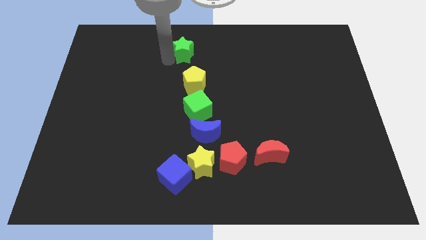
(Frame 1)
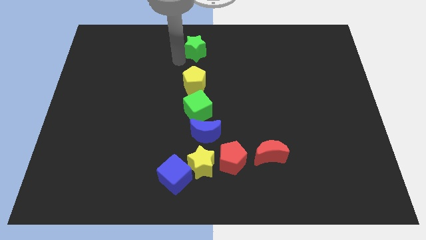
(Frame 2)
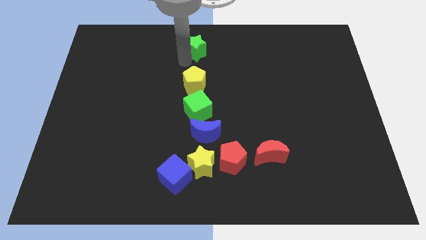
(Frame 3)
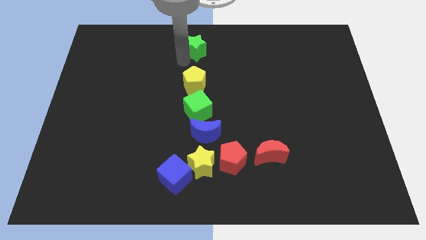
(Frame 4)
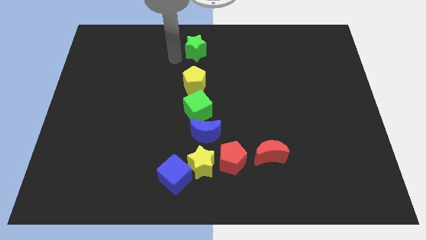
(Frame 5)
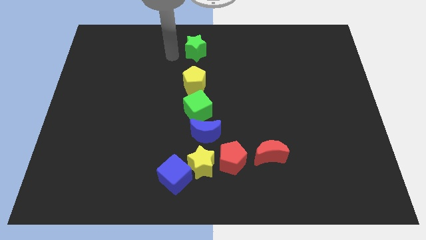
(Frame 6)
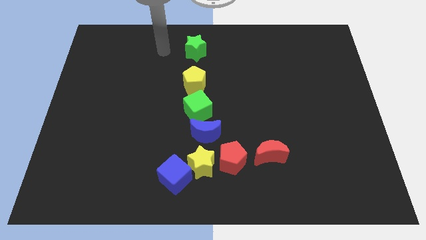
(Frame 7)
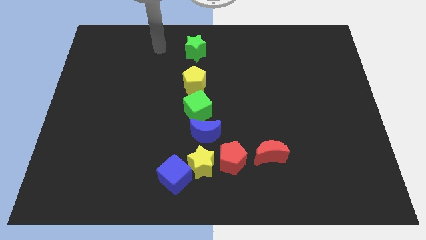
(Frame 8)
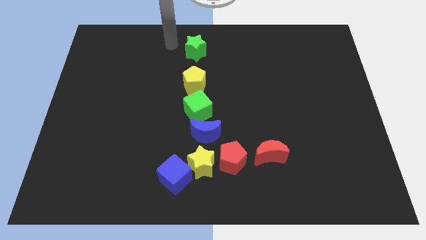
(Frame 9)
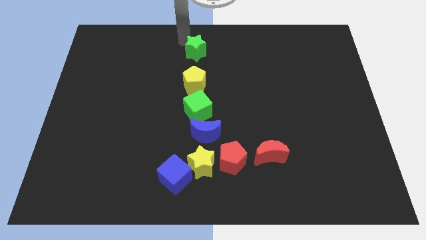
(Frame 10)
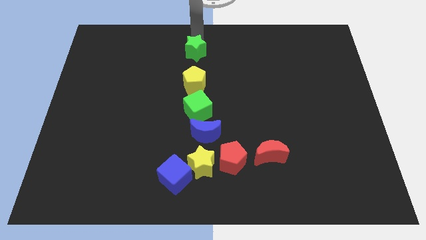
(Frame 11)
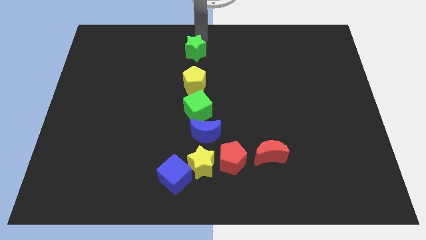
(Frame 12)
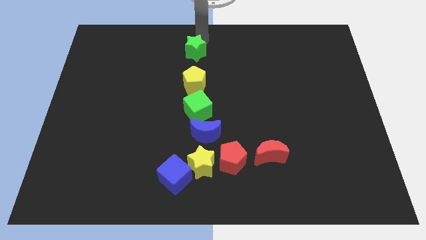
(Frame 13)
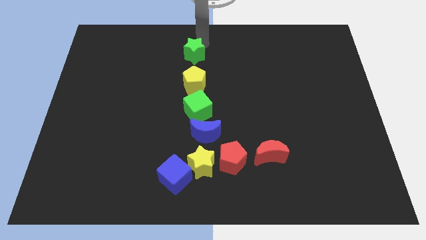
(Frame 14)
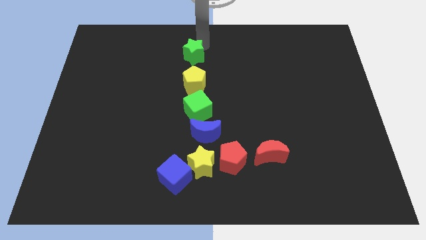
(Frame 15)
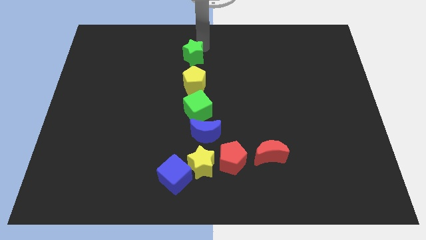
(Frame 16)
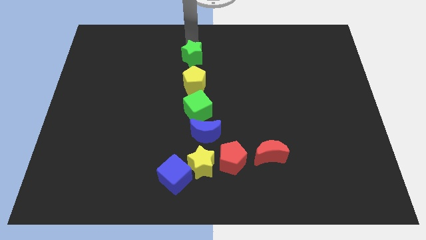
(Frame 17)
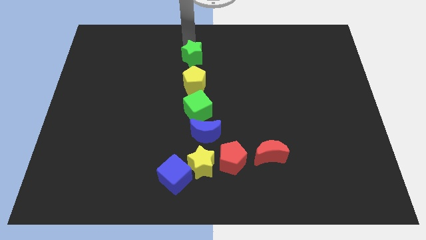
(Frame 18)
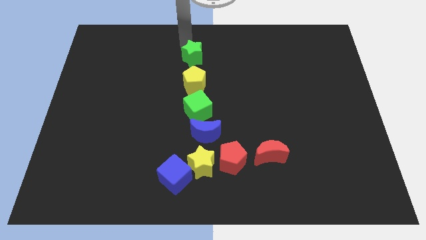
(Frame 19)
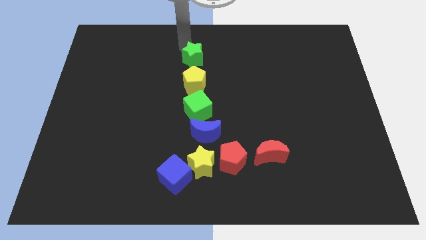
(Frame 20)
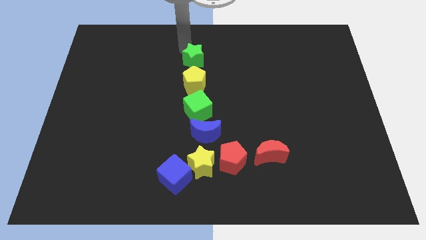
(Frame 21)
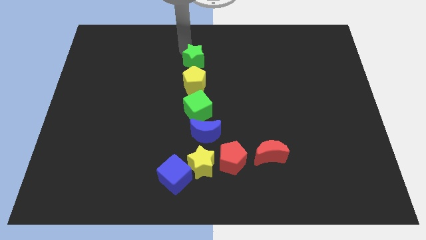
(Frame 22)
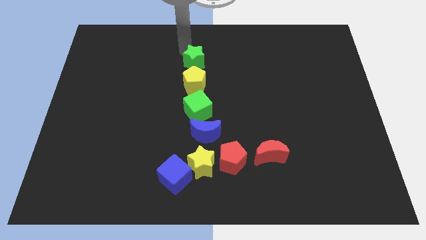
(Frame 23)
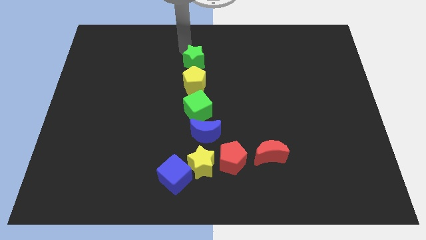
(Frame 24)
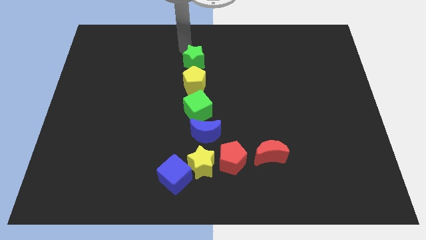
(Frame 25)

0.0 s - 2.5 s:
push the green star above the yellow pentagon vertically

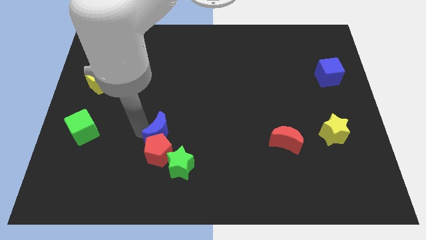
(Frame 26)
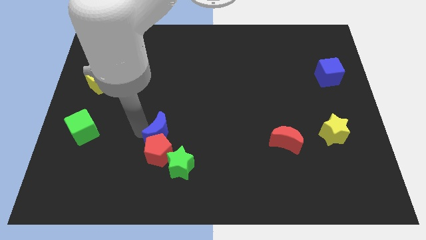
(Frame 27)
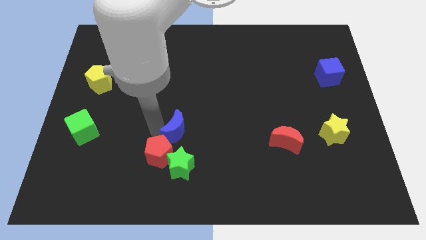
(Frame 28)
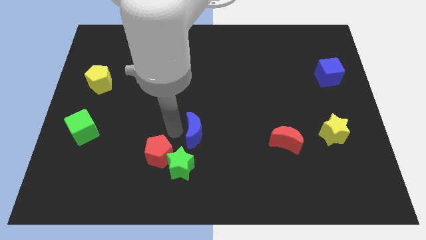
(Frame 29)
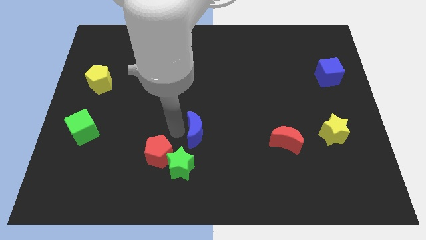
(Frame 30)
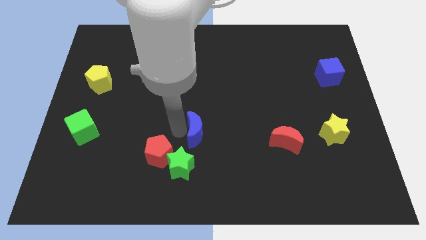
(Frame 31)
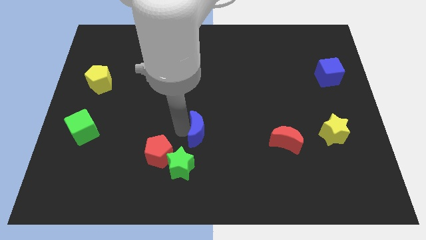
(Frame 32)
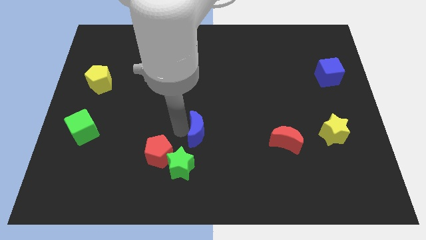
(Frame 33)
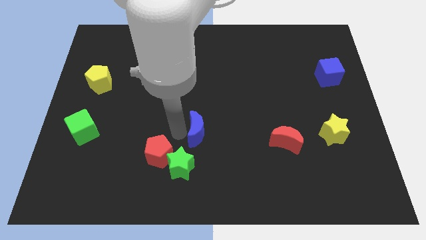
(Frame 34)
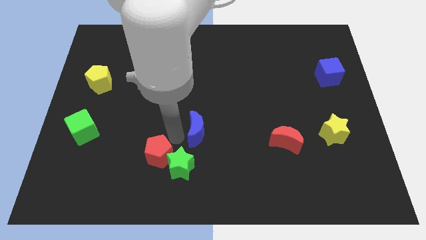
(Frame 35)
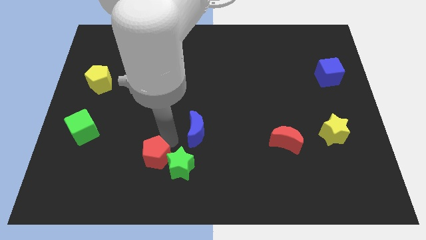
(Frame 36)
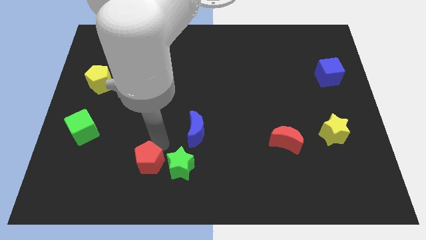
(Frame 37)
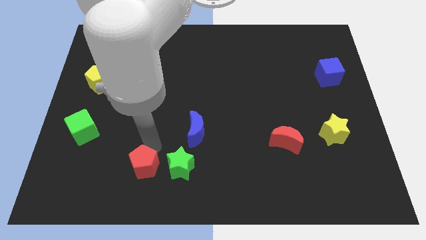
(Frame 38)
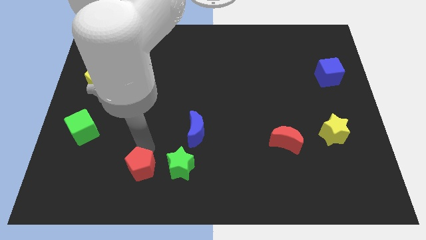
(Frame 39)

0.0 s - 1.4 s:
separate the blue crescent and the red pentagon

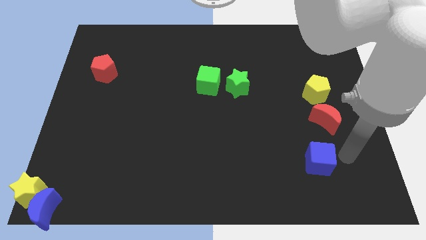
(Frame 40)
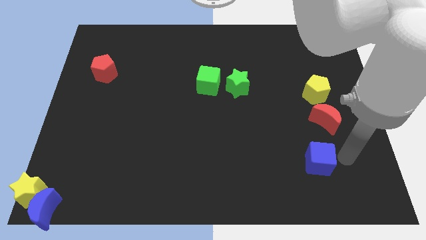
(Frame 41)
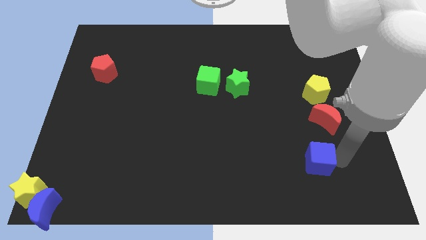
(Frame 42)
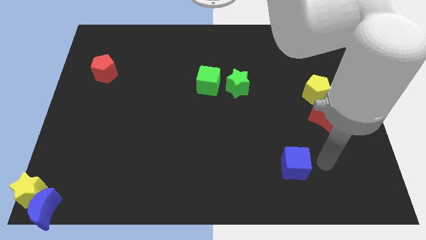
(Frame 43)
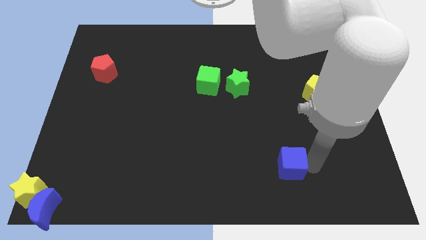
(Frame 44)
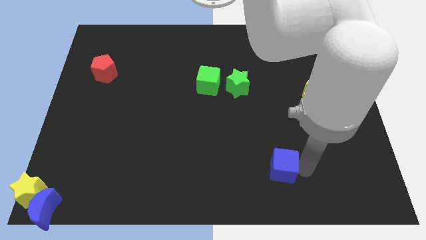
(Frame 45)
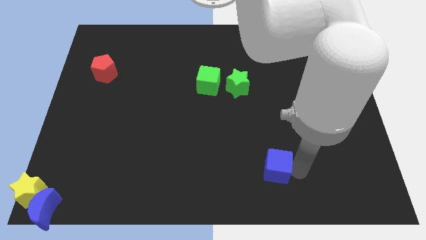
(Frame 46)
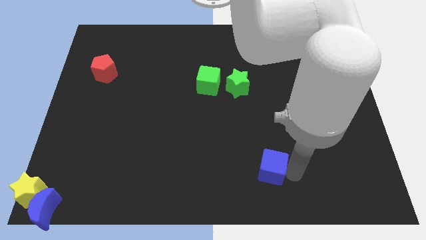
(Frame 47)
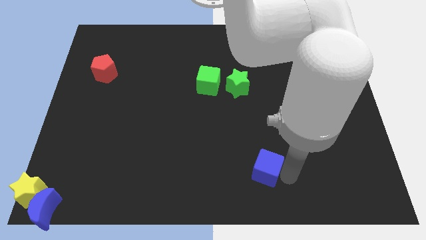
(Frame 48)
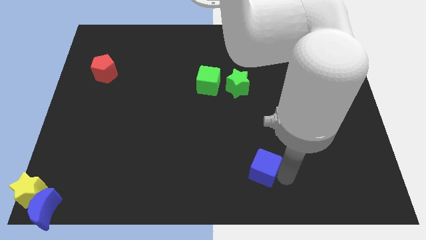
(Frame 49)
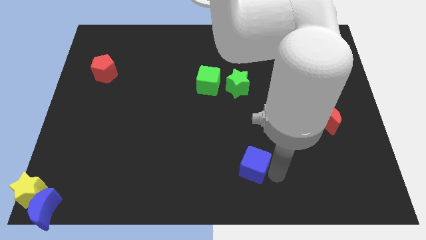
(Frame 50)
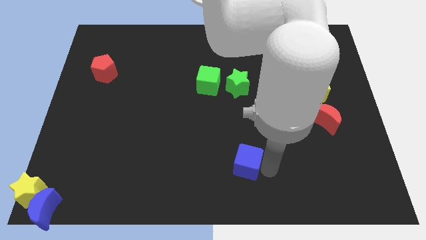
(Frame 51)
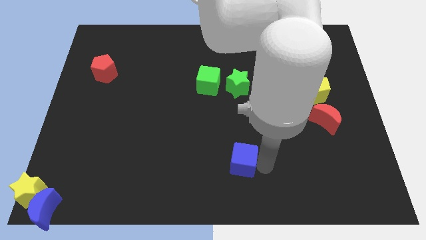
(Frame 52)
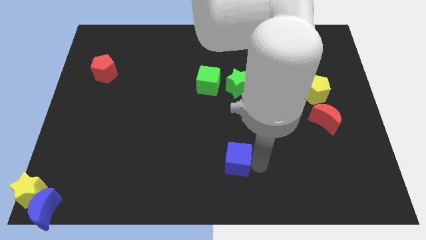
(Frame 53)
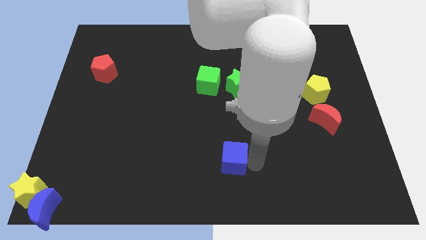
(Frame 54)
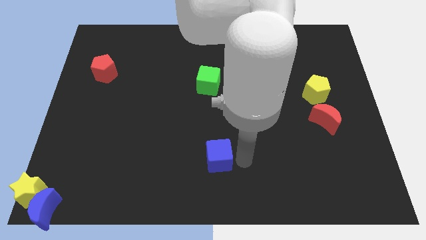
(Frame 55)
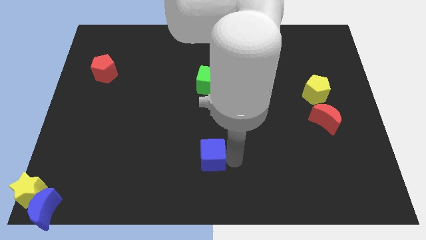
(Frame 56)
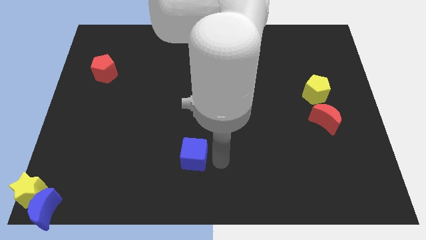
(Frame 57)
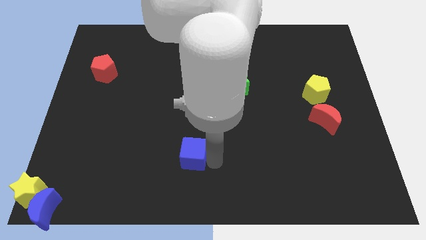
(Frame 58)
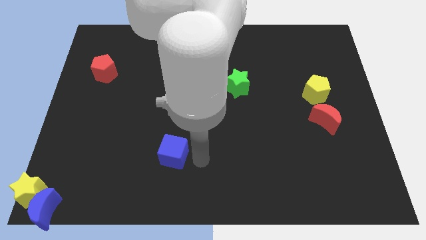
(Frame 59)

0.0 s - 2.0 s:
move the blue cube towards the left

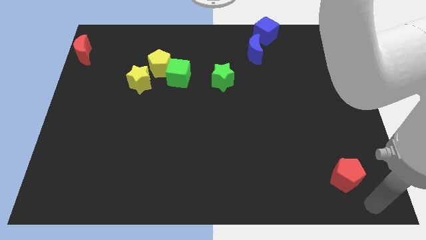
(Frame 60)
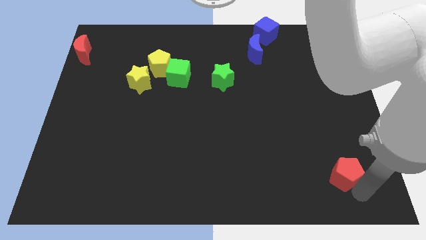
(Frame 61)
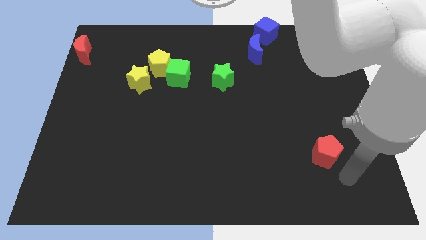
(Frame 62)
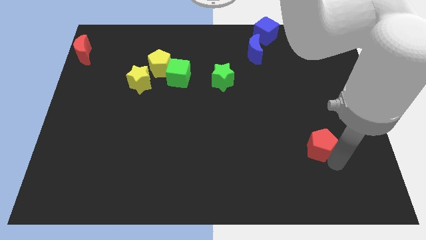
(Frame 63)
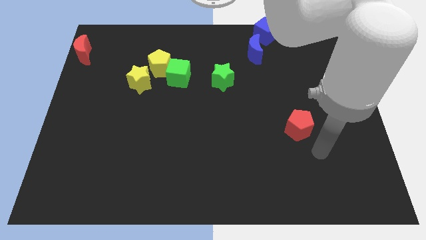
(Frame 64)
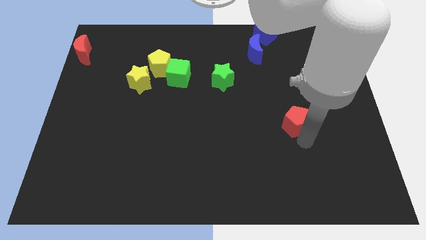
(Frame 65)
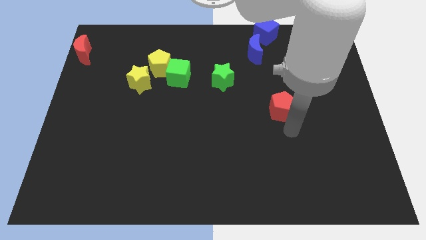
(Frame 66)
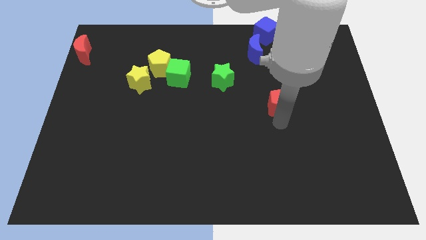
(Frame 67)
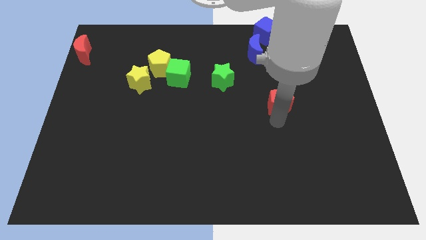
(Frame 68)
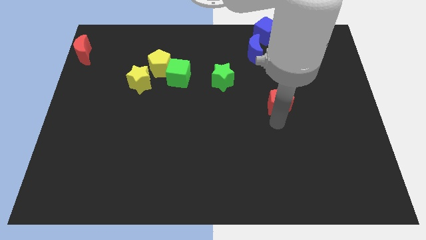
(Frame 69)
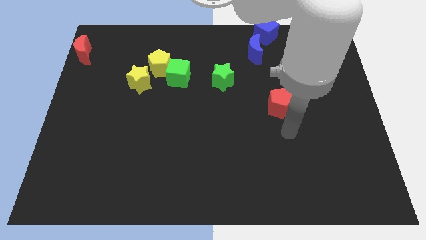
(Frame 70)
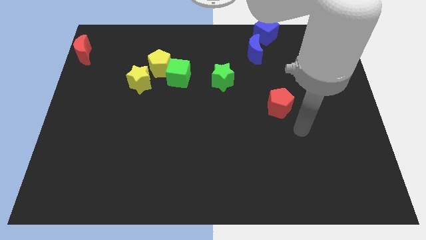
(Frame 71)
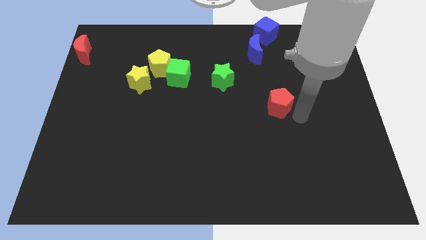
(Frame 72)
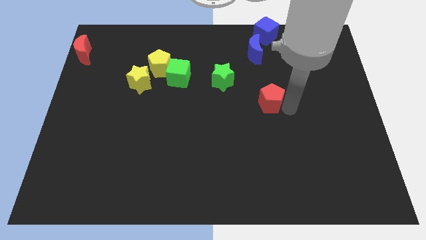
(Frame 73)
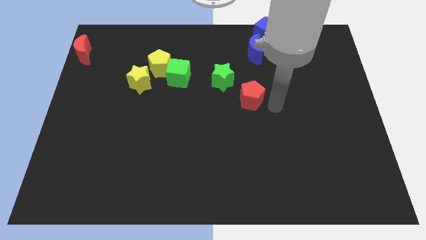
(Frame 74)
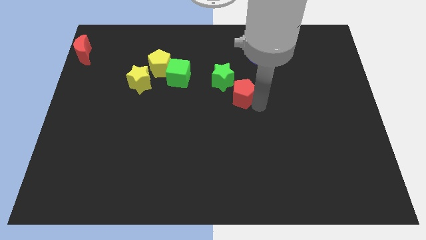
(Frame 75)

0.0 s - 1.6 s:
move the red pentagon diagonally to the green star

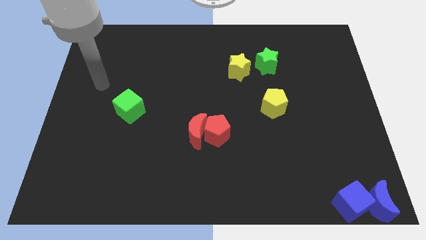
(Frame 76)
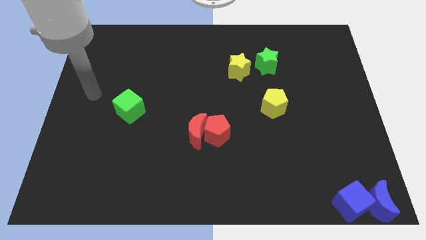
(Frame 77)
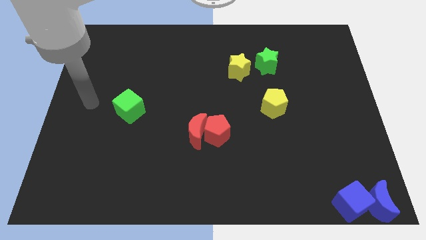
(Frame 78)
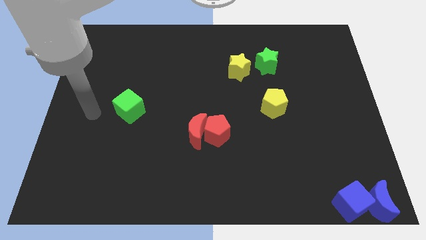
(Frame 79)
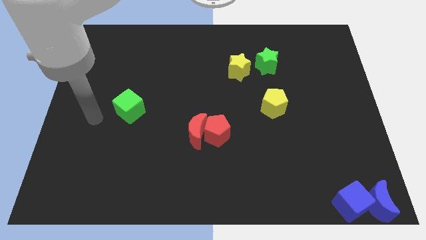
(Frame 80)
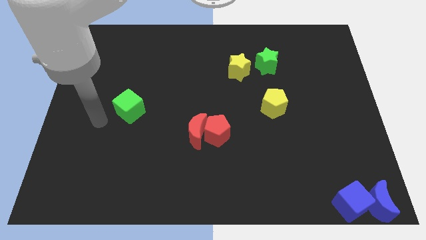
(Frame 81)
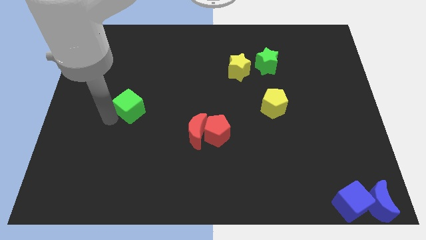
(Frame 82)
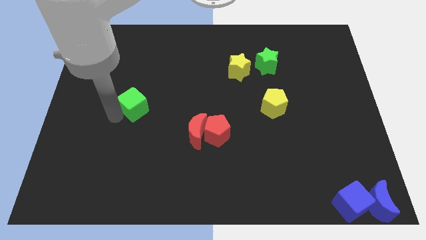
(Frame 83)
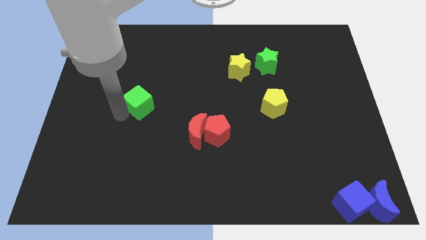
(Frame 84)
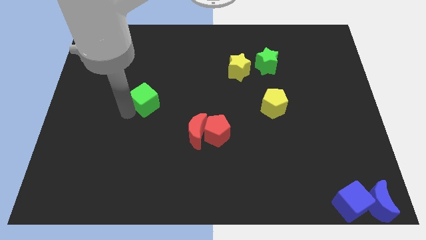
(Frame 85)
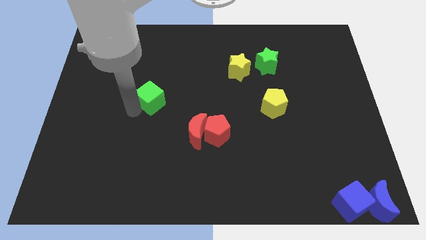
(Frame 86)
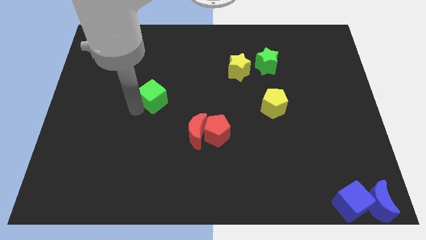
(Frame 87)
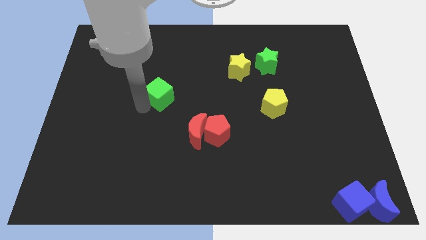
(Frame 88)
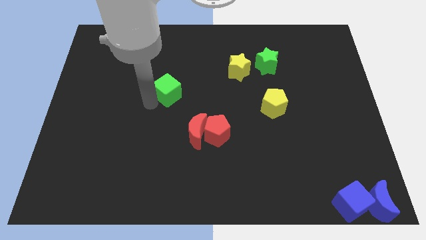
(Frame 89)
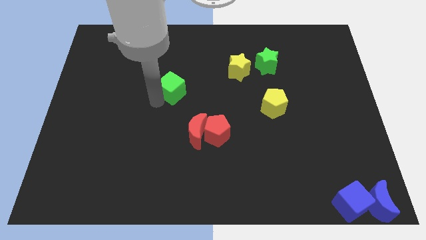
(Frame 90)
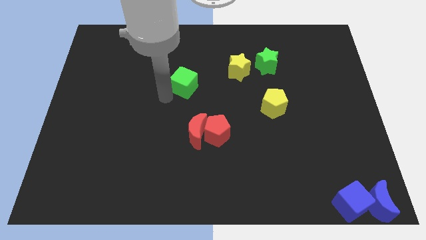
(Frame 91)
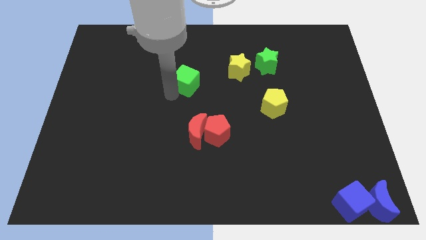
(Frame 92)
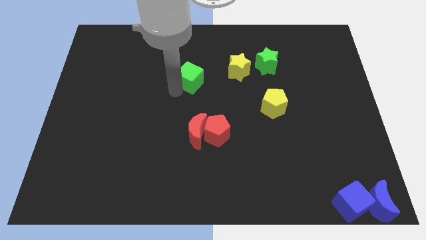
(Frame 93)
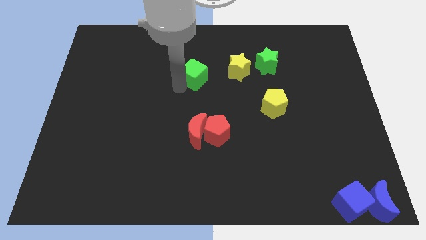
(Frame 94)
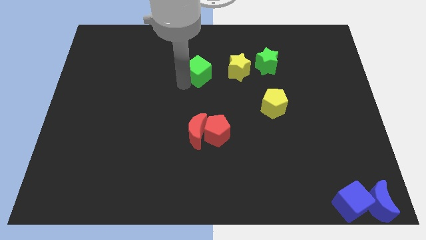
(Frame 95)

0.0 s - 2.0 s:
move the green cube vertically above the red moon
